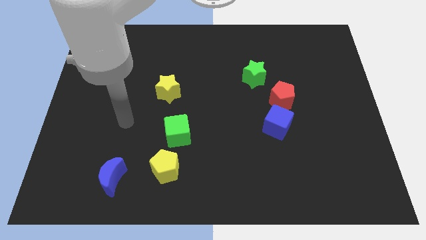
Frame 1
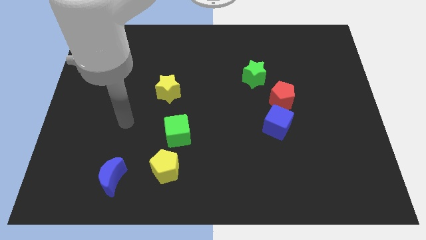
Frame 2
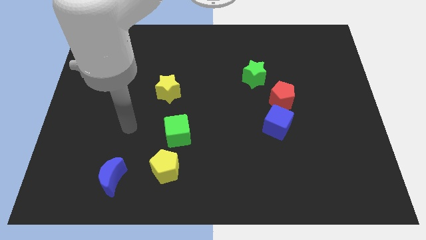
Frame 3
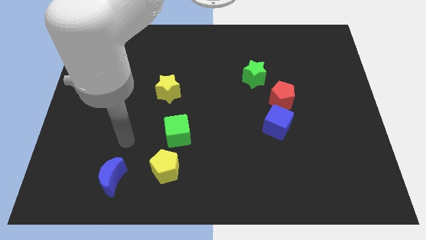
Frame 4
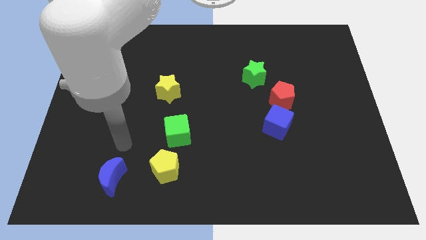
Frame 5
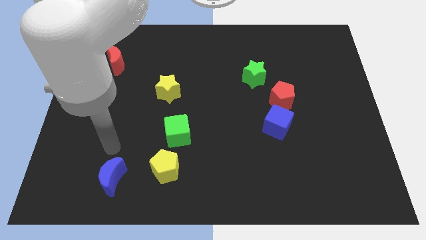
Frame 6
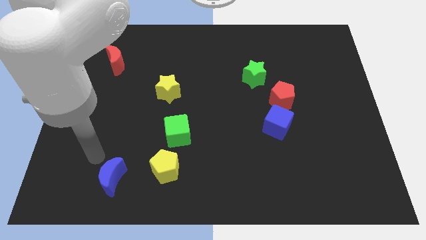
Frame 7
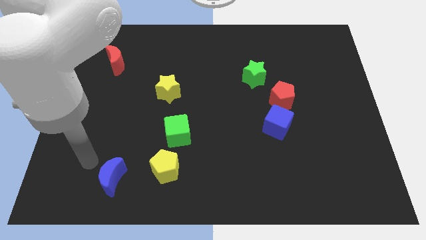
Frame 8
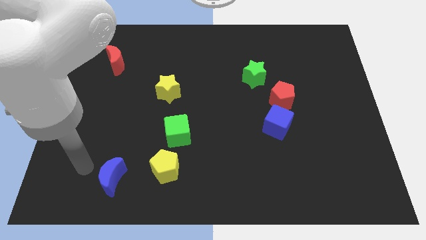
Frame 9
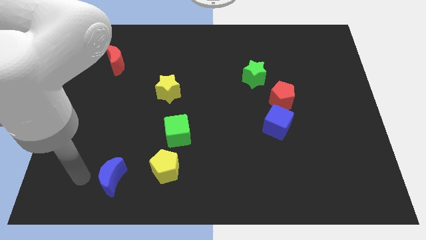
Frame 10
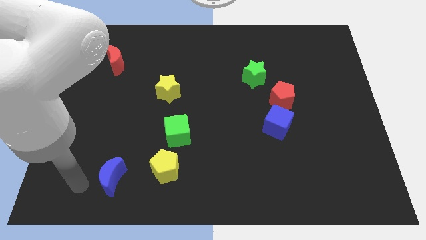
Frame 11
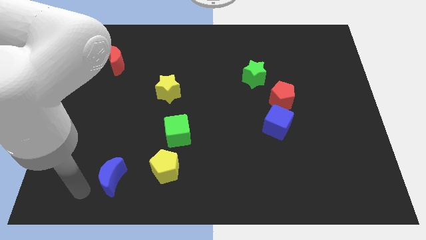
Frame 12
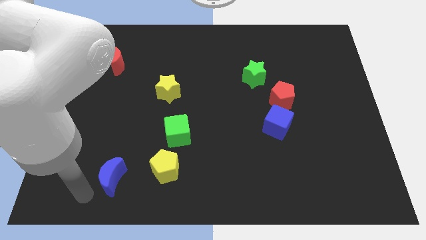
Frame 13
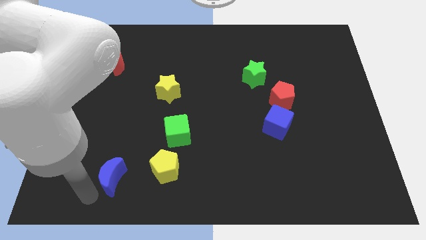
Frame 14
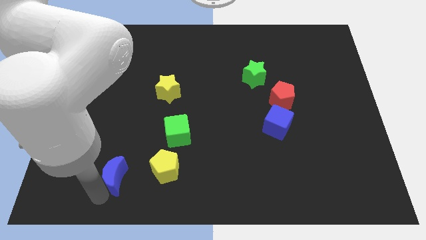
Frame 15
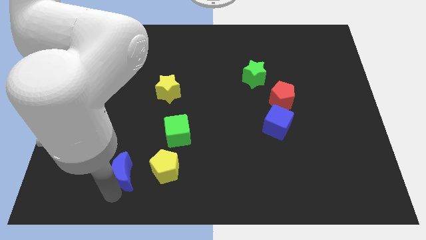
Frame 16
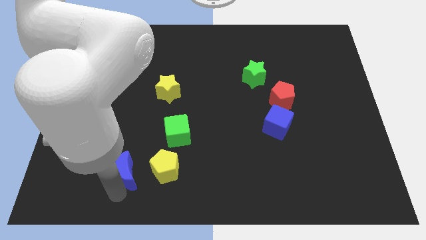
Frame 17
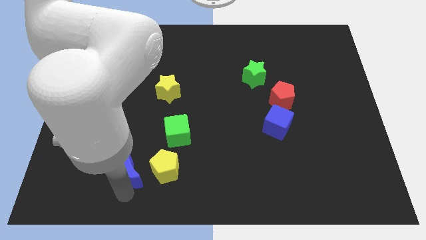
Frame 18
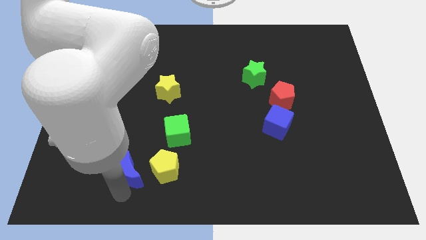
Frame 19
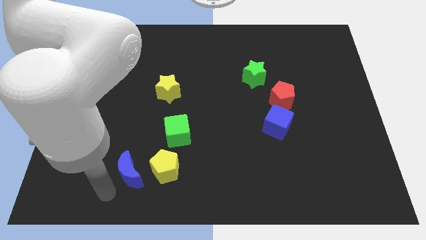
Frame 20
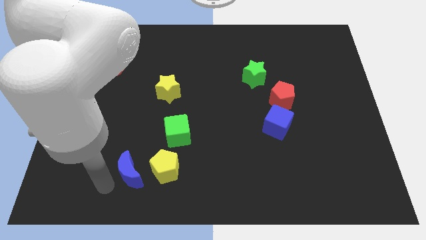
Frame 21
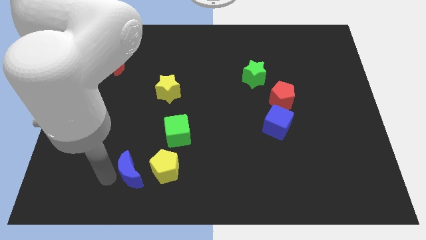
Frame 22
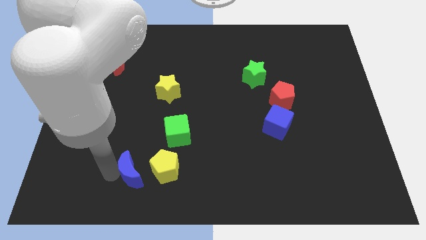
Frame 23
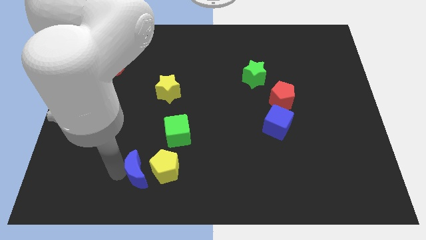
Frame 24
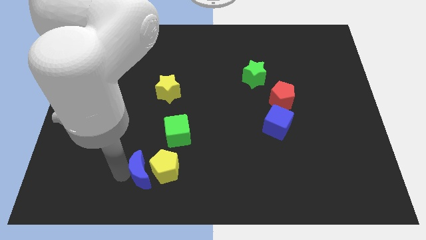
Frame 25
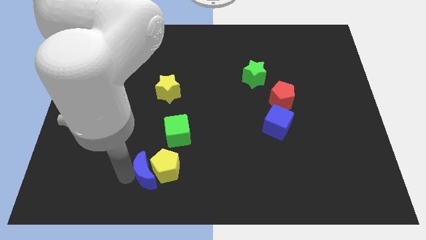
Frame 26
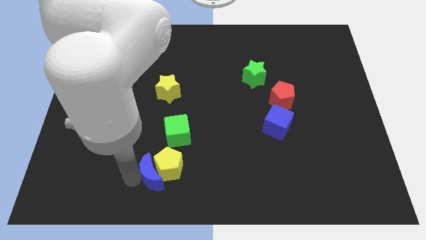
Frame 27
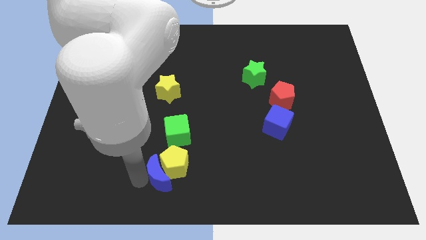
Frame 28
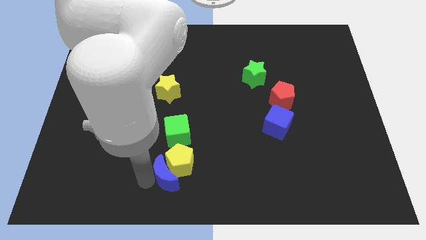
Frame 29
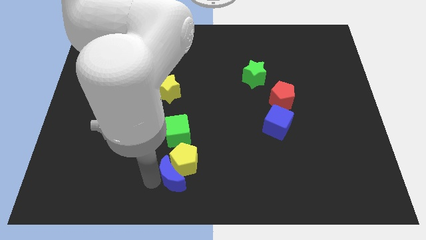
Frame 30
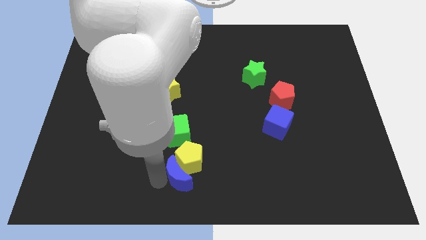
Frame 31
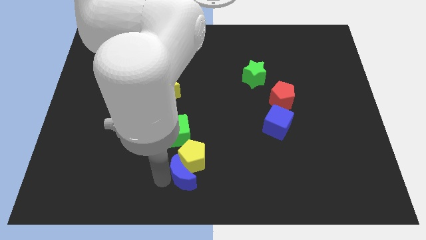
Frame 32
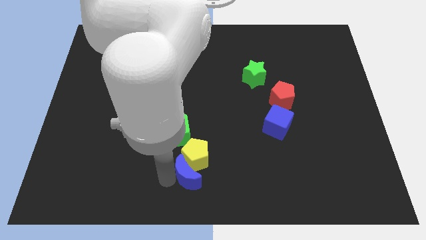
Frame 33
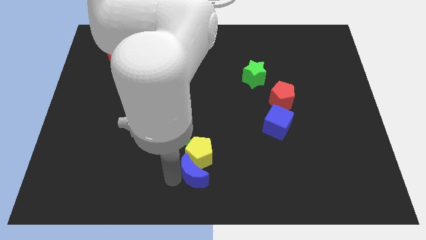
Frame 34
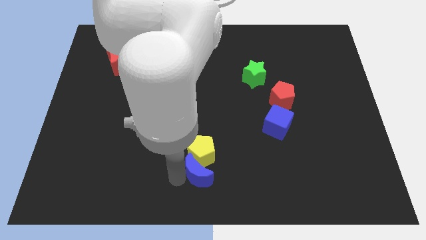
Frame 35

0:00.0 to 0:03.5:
push the blue moon into the yellow pentagon

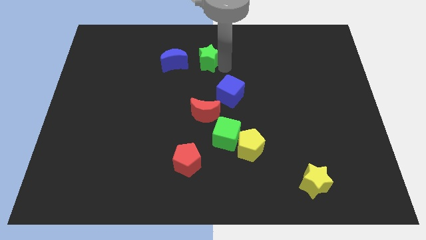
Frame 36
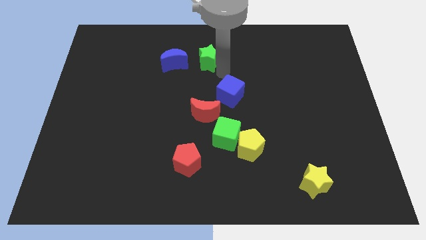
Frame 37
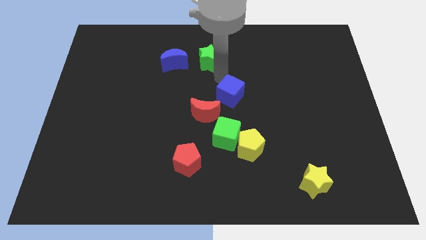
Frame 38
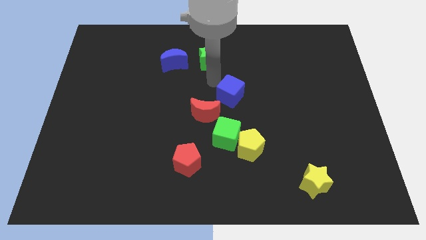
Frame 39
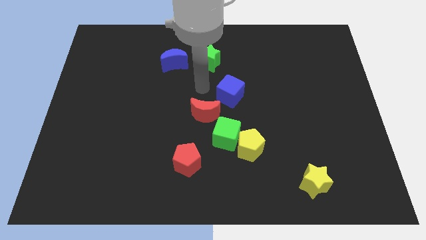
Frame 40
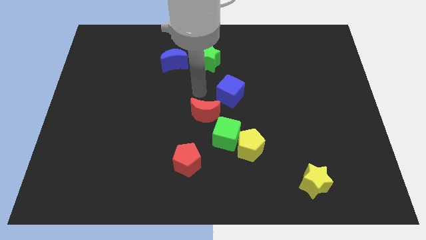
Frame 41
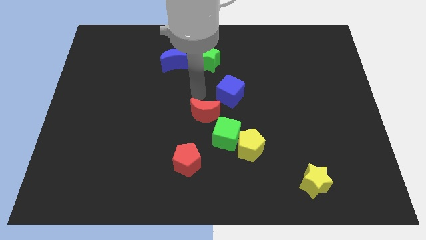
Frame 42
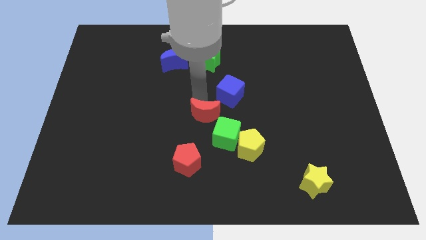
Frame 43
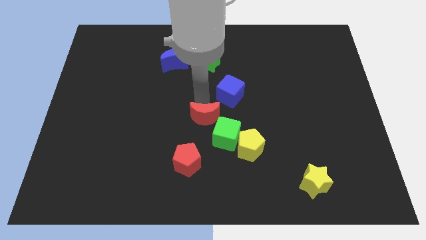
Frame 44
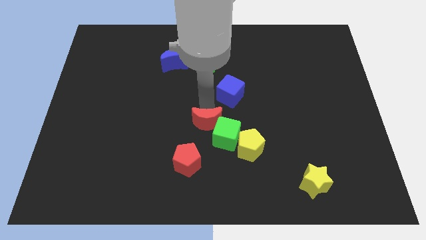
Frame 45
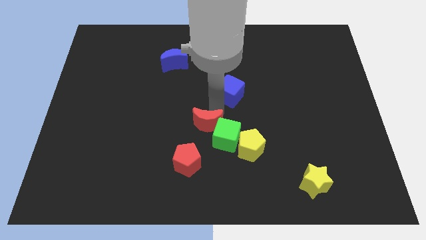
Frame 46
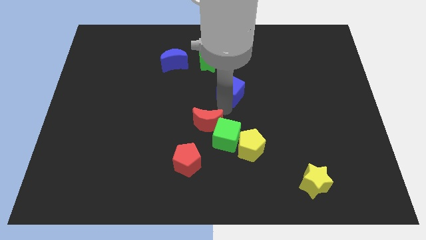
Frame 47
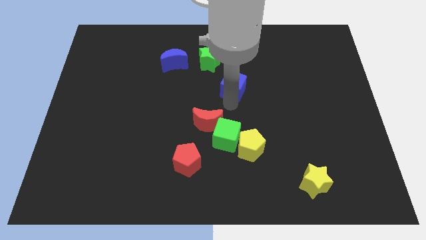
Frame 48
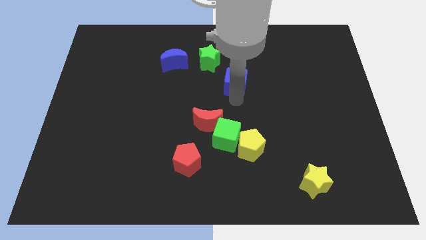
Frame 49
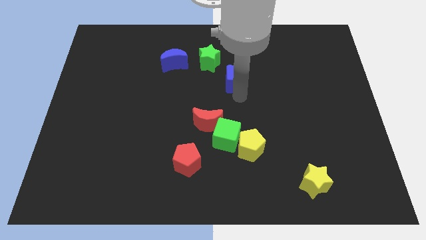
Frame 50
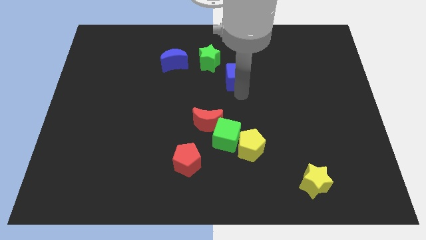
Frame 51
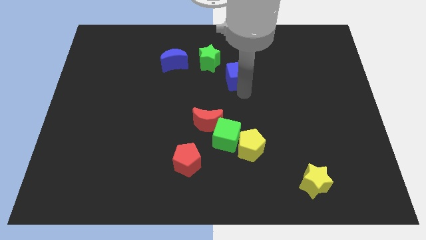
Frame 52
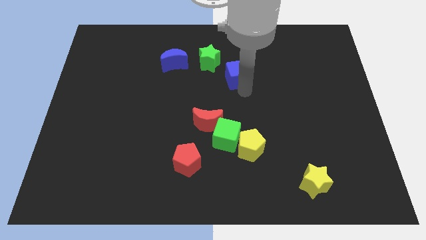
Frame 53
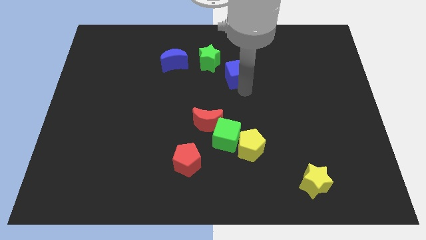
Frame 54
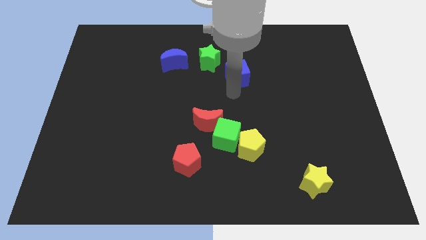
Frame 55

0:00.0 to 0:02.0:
separate red moon and blue cube

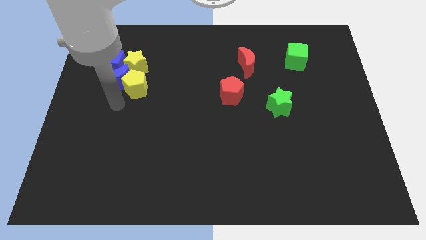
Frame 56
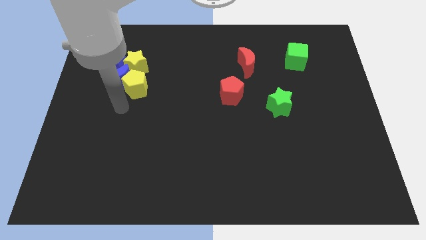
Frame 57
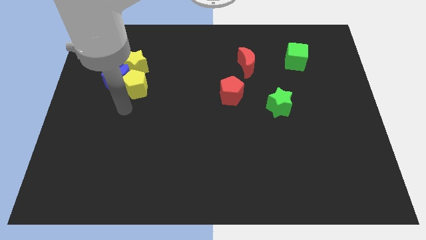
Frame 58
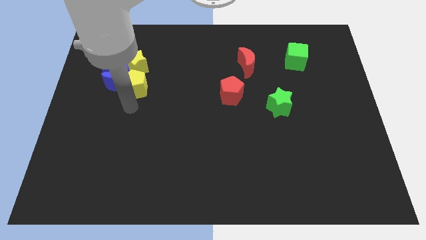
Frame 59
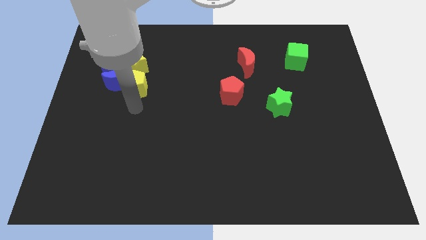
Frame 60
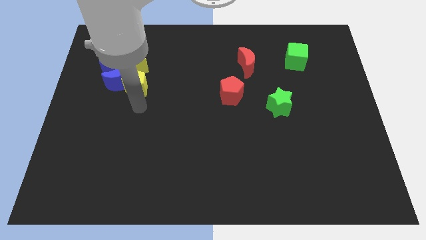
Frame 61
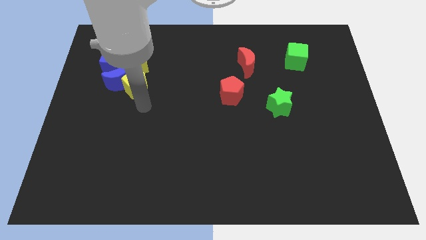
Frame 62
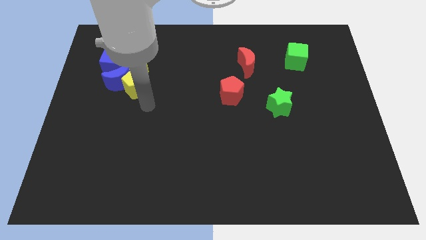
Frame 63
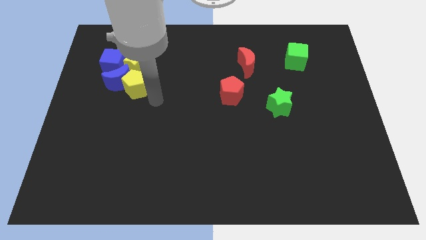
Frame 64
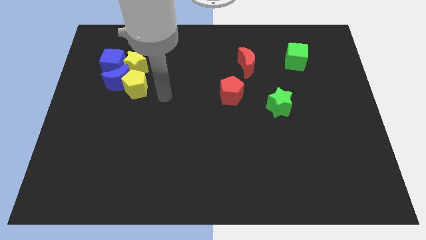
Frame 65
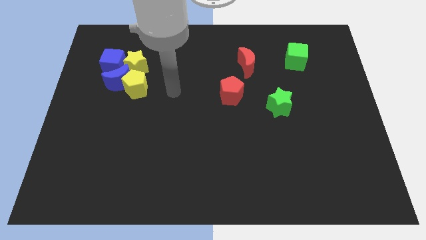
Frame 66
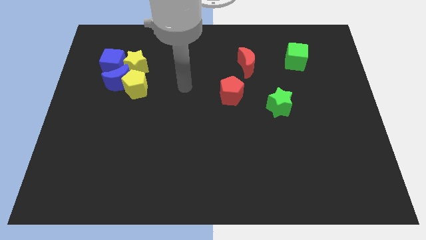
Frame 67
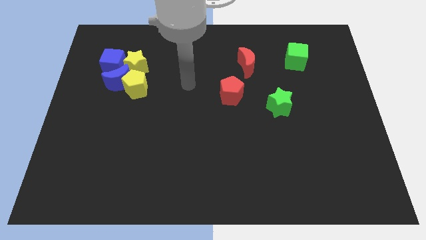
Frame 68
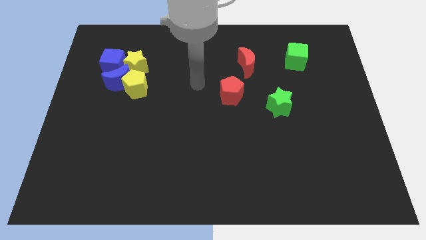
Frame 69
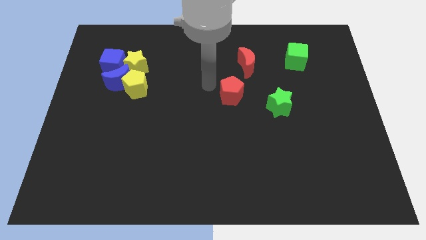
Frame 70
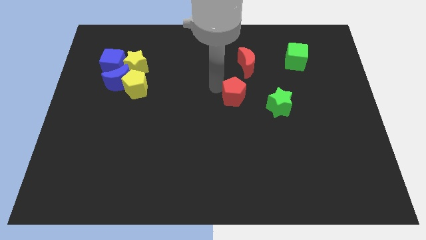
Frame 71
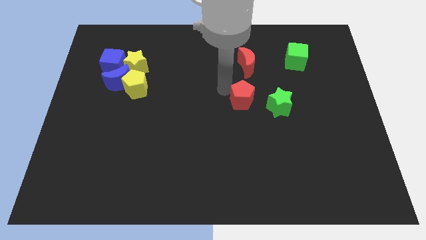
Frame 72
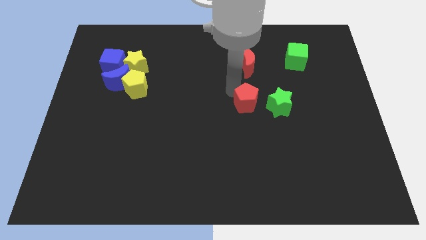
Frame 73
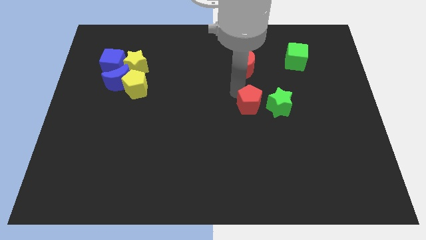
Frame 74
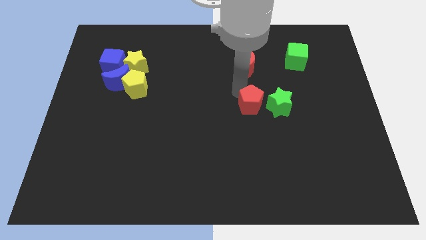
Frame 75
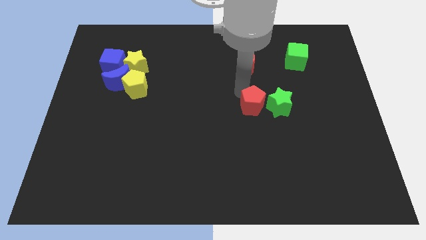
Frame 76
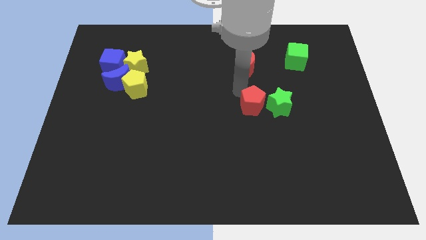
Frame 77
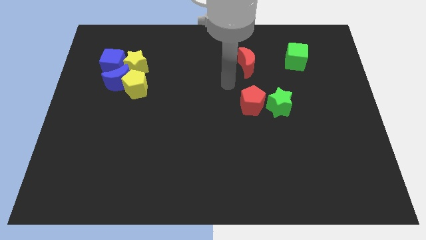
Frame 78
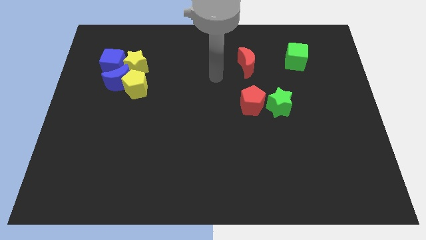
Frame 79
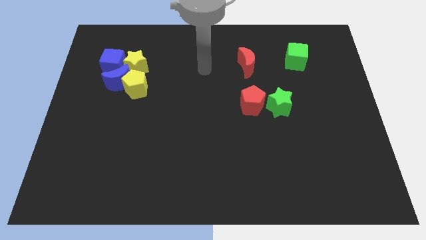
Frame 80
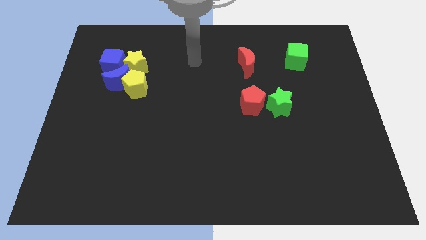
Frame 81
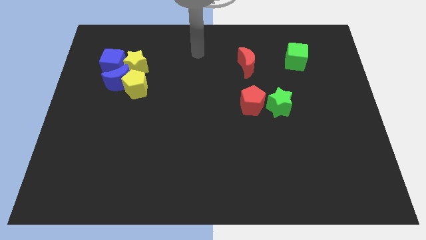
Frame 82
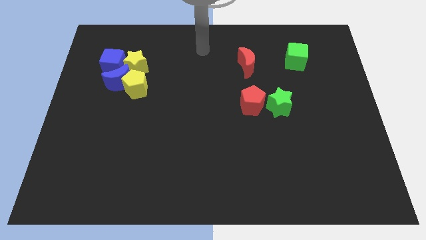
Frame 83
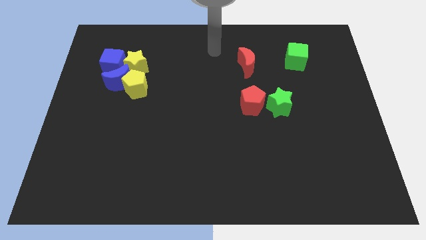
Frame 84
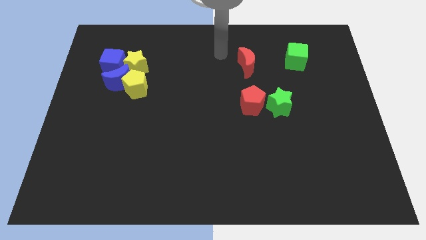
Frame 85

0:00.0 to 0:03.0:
move the red pentagon to the left of the green star

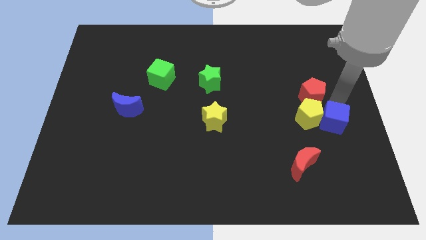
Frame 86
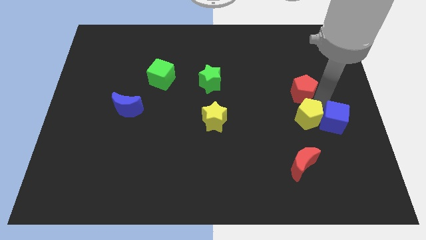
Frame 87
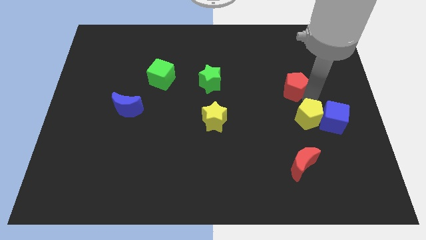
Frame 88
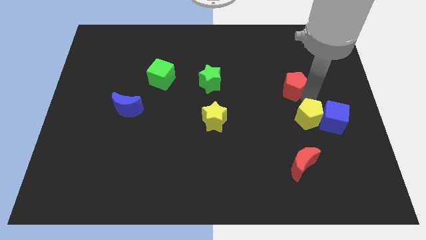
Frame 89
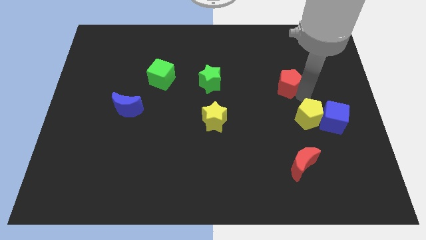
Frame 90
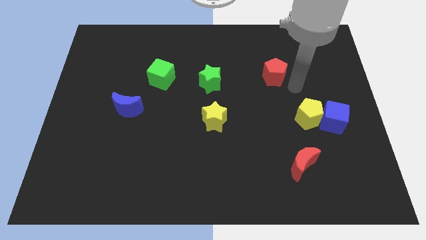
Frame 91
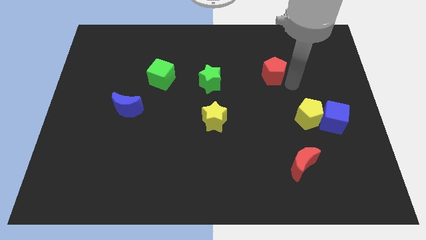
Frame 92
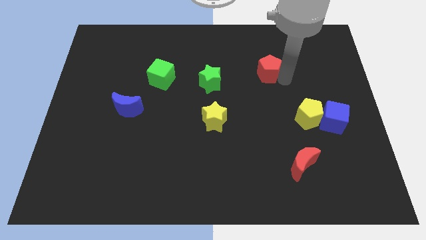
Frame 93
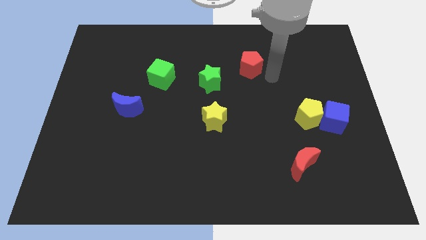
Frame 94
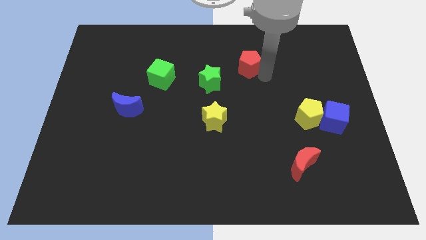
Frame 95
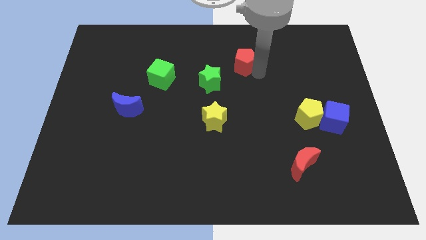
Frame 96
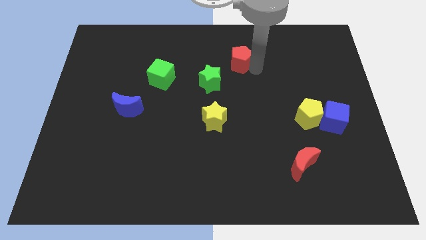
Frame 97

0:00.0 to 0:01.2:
place the red pentagon diagonally top right to green star
